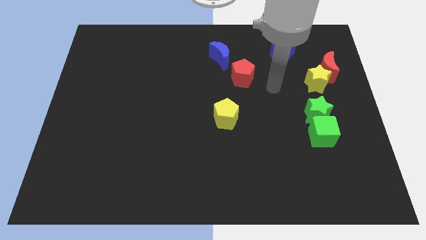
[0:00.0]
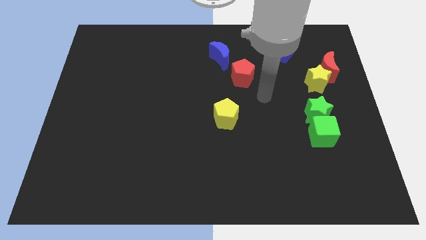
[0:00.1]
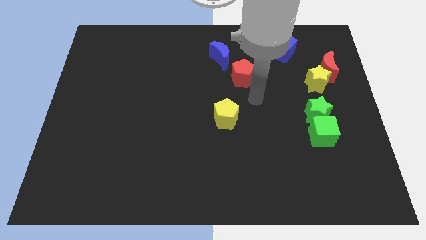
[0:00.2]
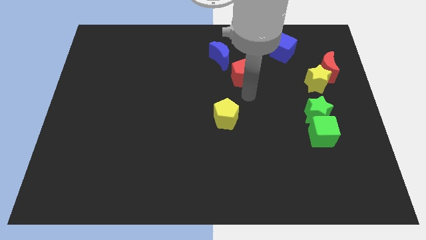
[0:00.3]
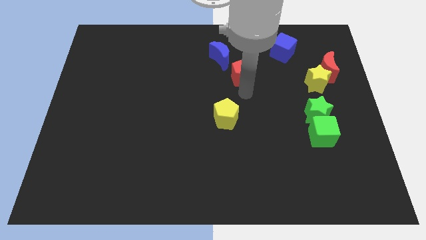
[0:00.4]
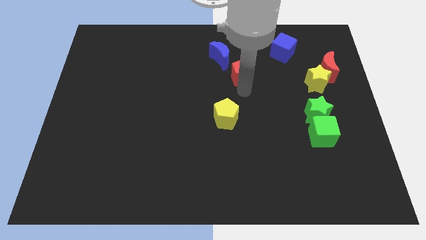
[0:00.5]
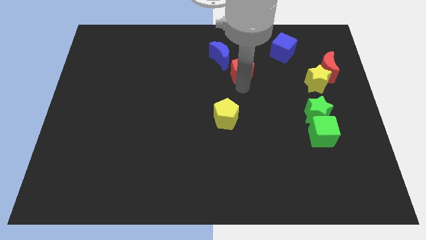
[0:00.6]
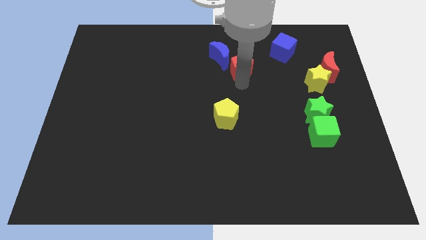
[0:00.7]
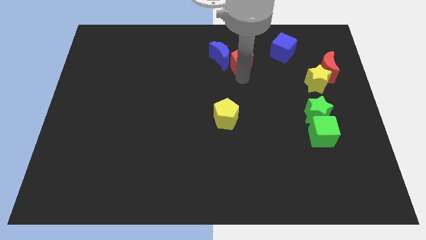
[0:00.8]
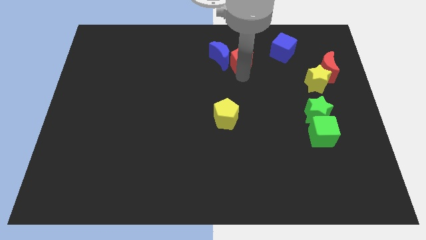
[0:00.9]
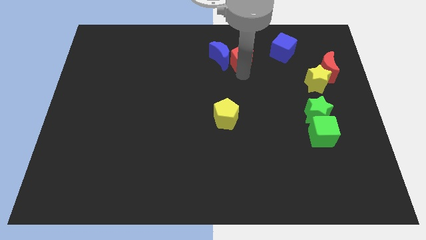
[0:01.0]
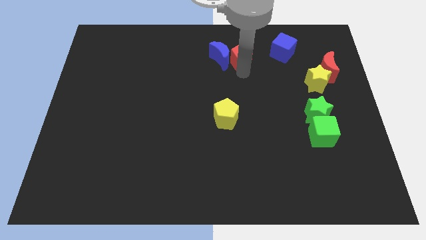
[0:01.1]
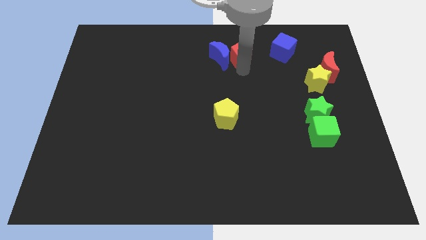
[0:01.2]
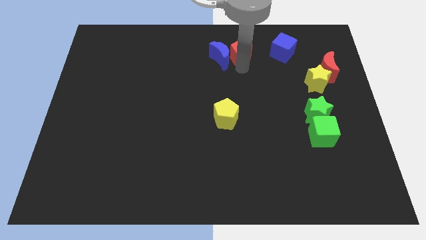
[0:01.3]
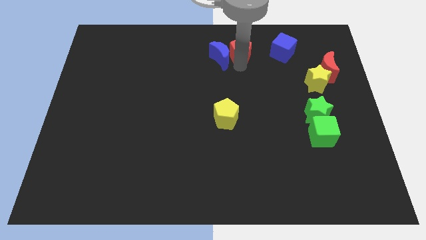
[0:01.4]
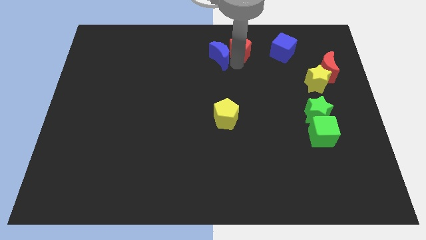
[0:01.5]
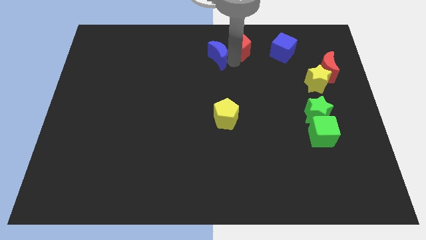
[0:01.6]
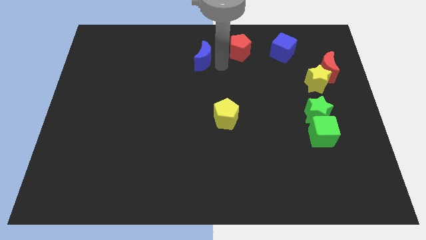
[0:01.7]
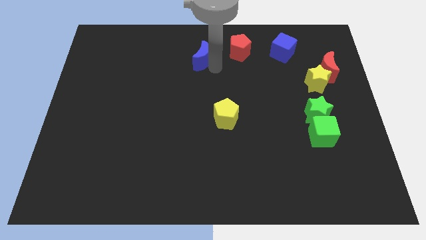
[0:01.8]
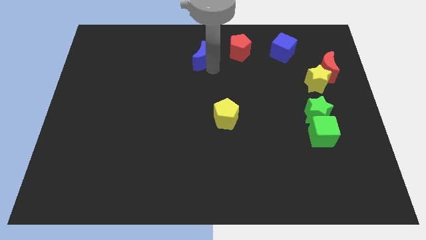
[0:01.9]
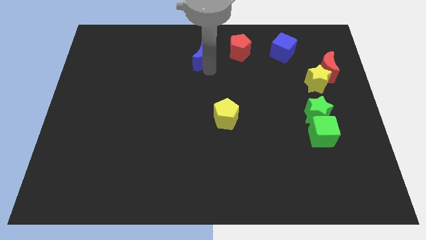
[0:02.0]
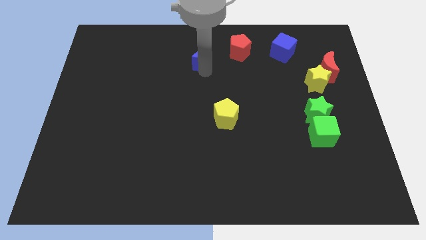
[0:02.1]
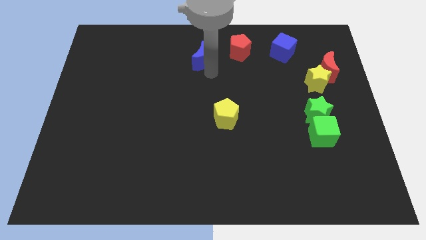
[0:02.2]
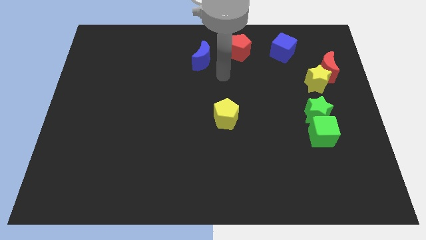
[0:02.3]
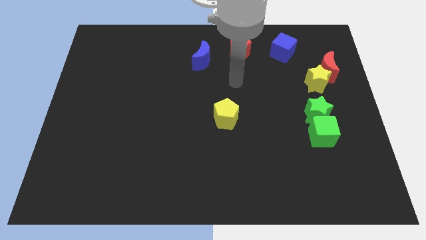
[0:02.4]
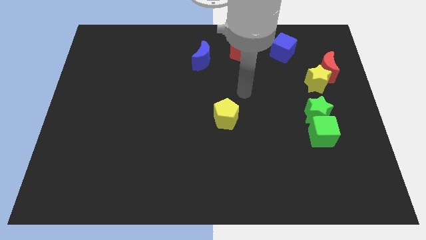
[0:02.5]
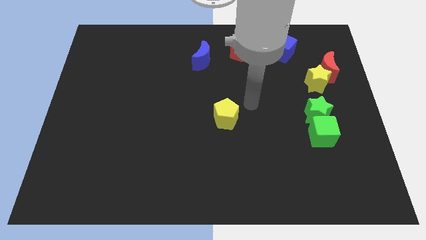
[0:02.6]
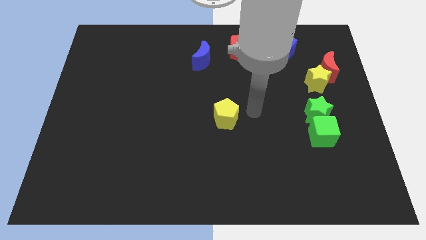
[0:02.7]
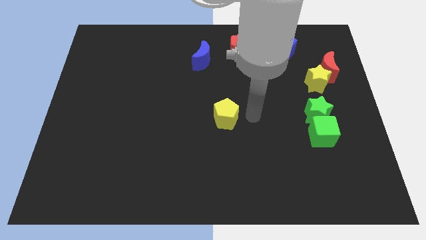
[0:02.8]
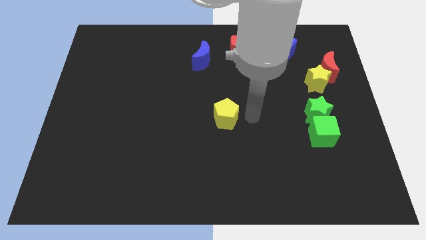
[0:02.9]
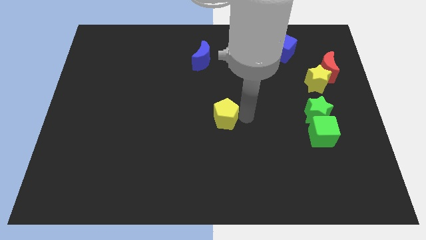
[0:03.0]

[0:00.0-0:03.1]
place red pentagon to the right of the blue crescent and separate blue crescent from red pentagon

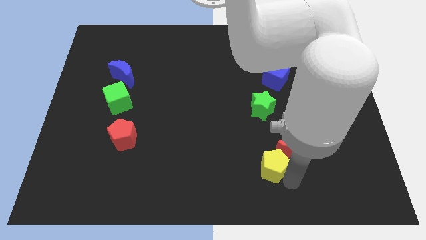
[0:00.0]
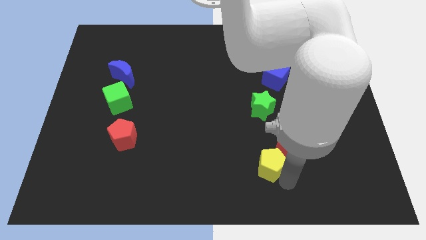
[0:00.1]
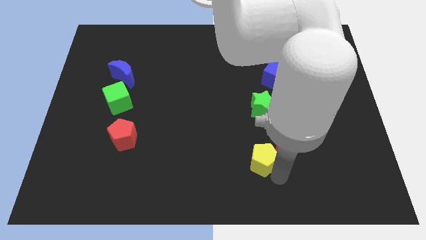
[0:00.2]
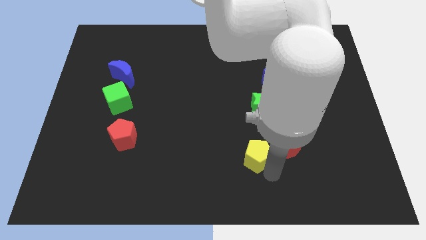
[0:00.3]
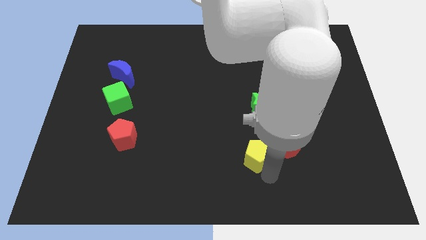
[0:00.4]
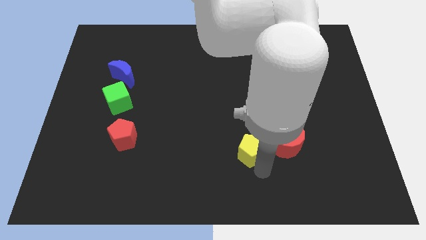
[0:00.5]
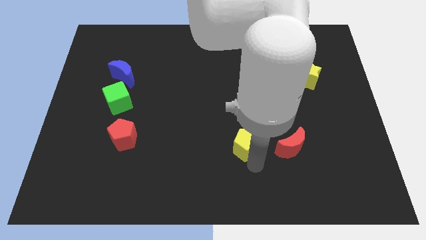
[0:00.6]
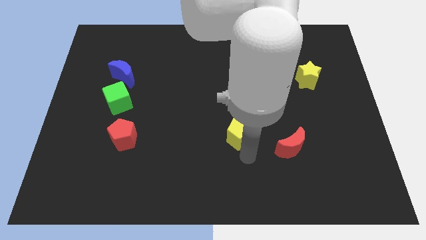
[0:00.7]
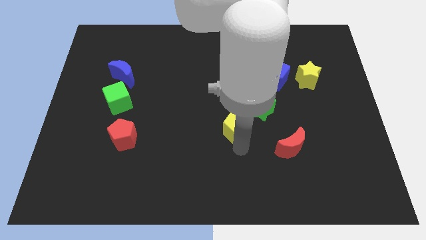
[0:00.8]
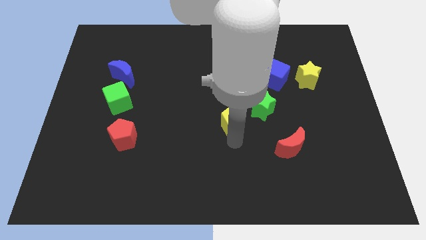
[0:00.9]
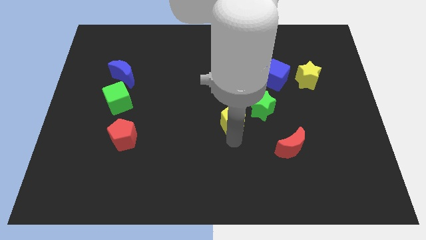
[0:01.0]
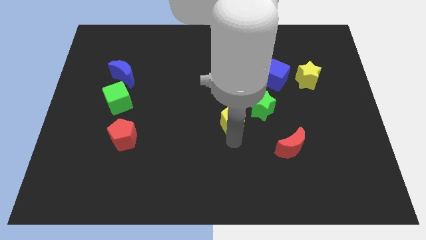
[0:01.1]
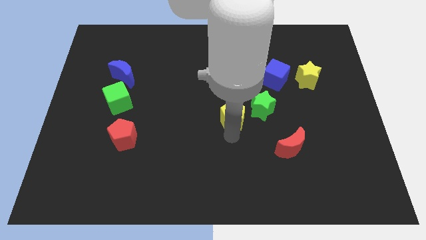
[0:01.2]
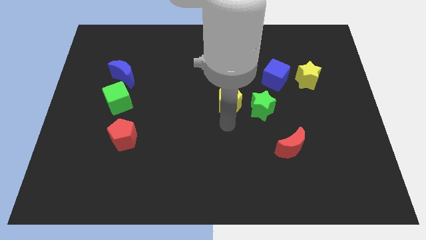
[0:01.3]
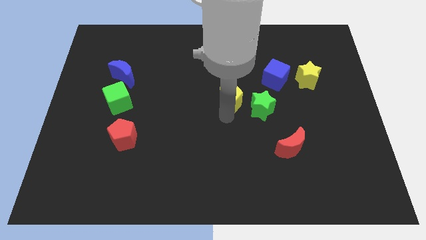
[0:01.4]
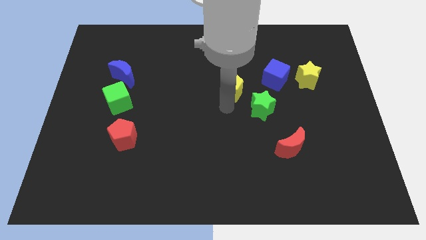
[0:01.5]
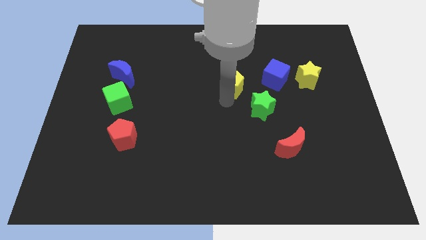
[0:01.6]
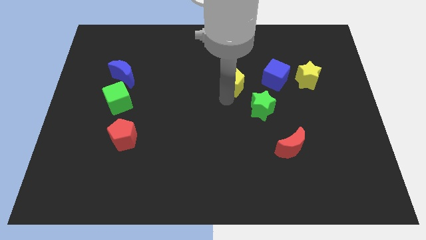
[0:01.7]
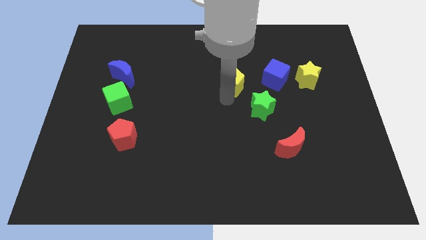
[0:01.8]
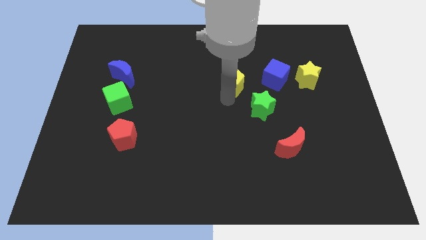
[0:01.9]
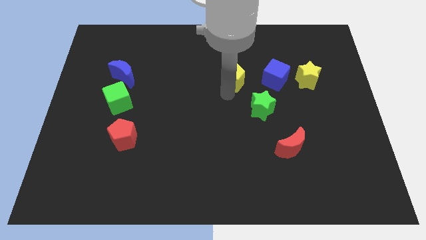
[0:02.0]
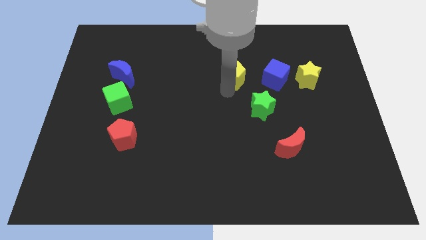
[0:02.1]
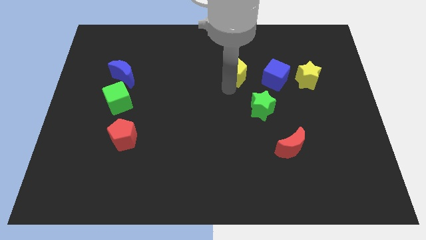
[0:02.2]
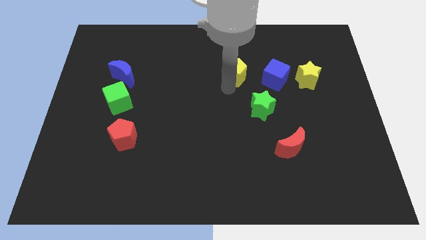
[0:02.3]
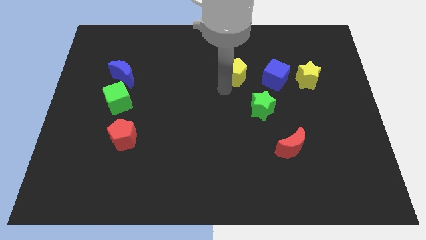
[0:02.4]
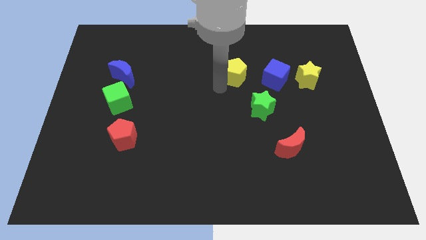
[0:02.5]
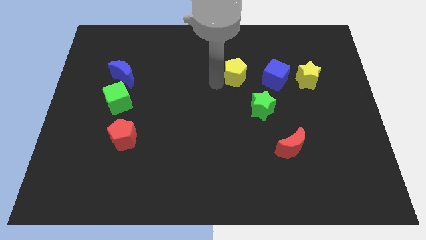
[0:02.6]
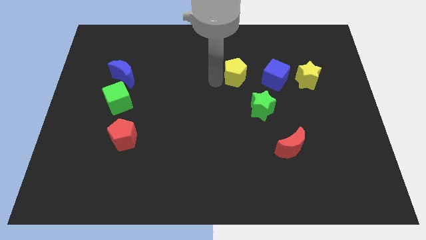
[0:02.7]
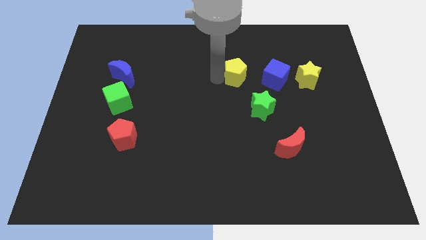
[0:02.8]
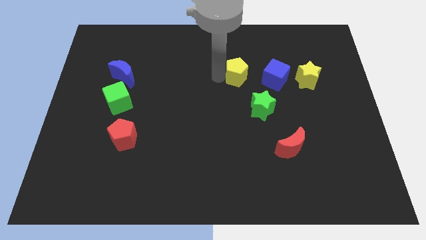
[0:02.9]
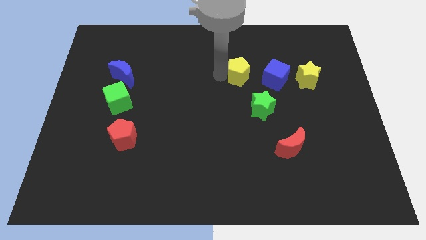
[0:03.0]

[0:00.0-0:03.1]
place yellow pentagon to the left of blue cube

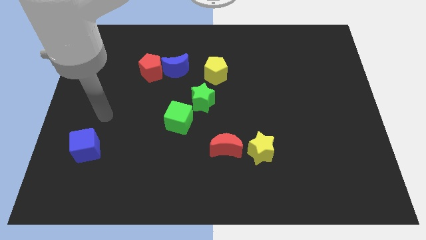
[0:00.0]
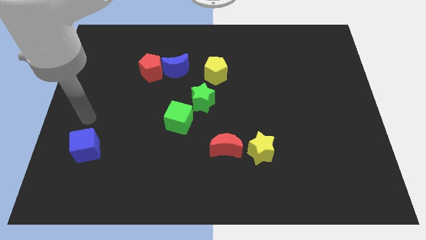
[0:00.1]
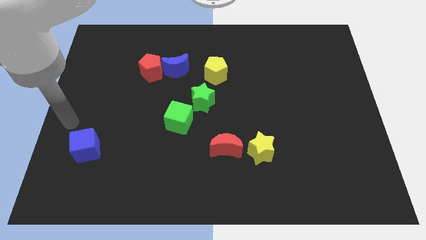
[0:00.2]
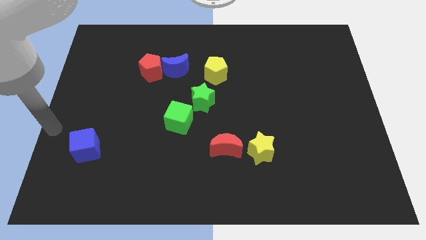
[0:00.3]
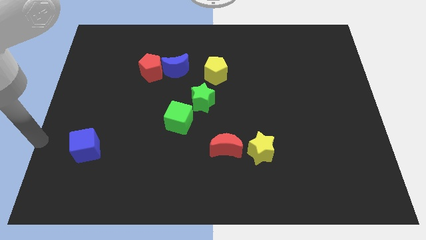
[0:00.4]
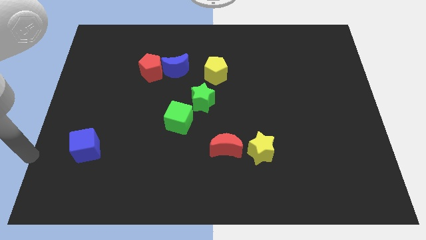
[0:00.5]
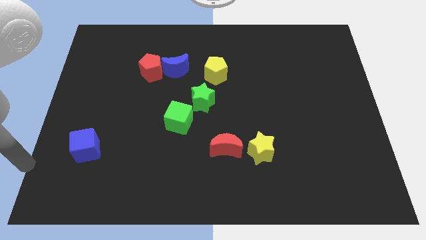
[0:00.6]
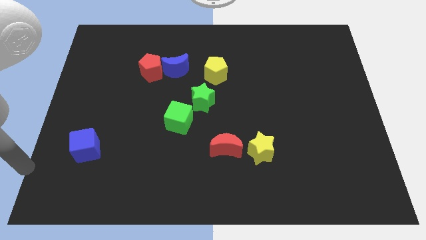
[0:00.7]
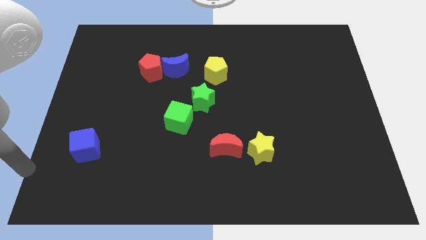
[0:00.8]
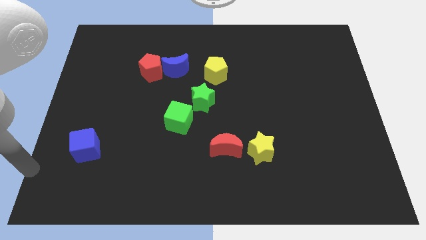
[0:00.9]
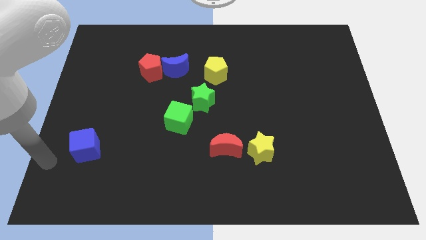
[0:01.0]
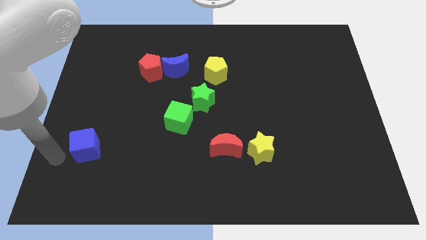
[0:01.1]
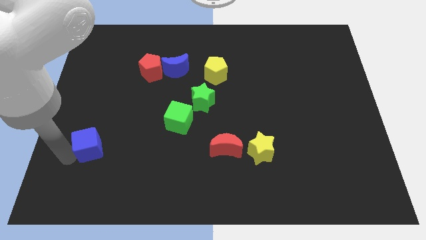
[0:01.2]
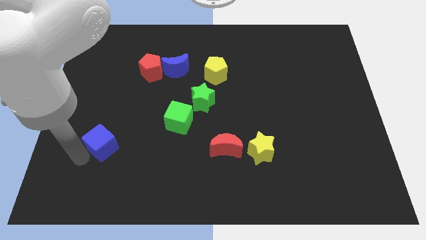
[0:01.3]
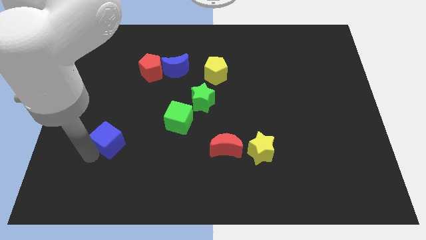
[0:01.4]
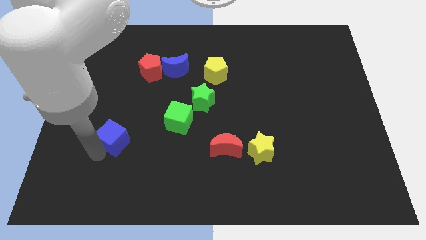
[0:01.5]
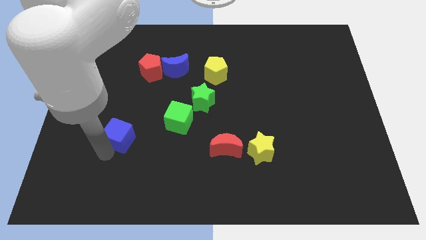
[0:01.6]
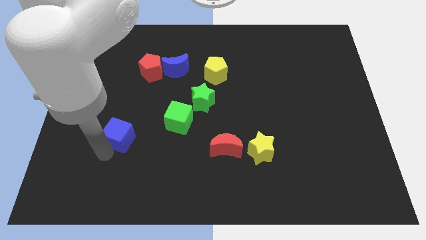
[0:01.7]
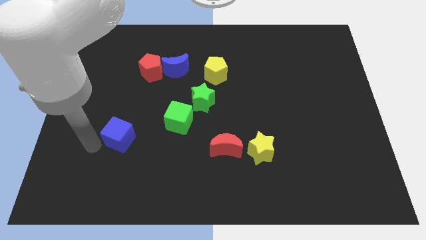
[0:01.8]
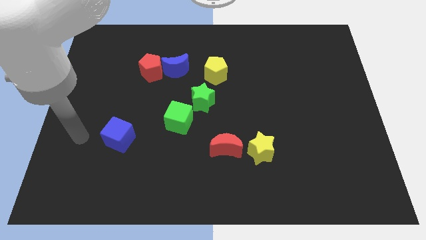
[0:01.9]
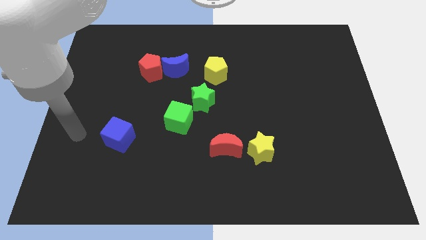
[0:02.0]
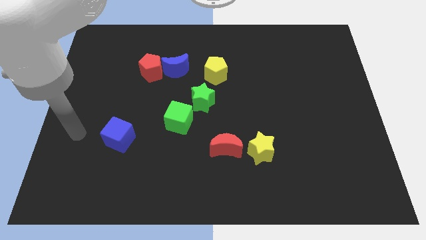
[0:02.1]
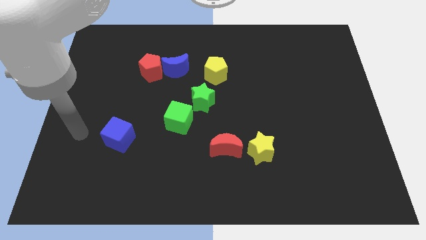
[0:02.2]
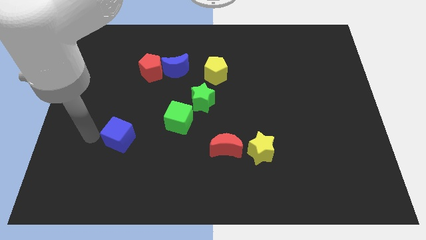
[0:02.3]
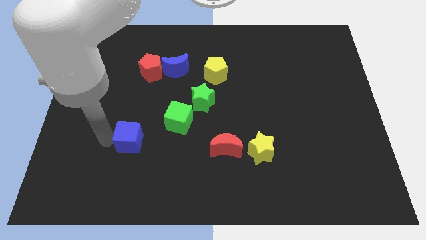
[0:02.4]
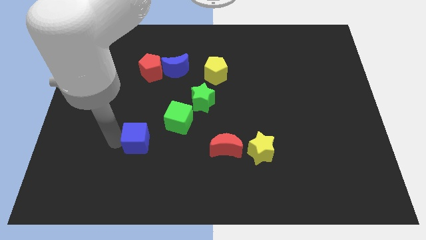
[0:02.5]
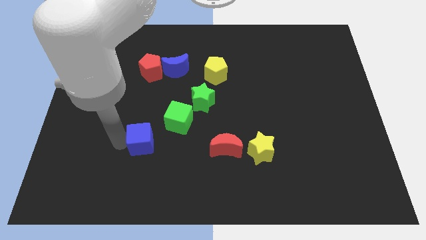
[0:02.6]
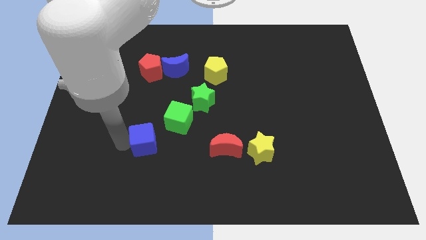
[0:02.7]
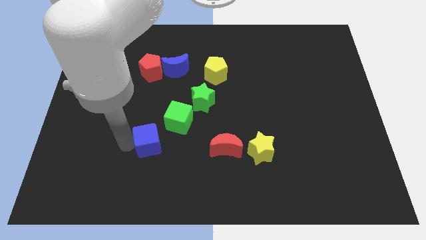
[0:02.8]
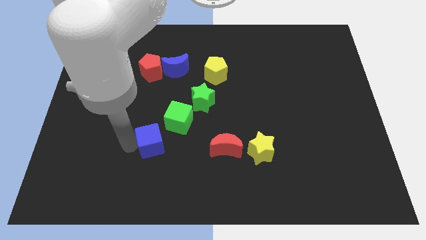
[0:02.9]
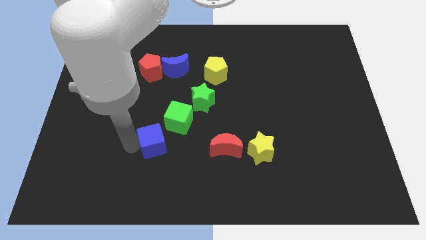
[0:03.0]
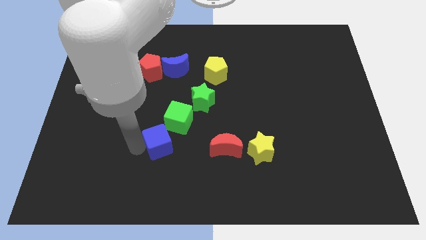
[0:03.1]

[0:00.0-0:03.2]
place blue cube below red pentagon
